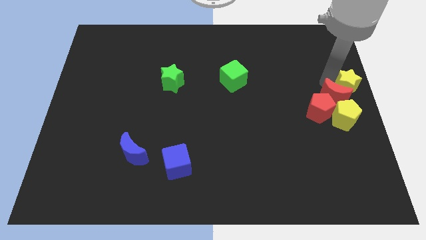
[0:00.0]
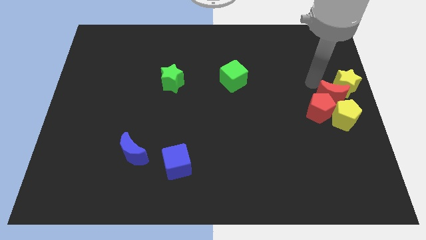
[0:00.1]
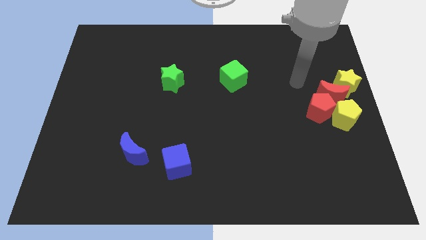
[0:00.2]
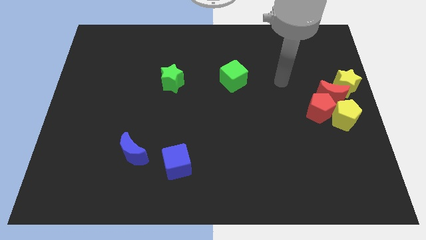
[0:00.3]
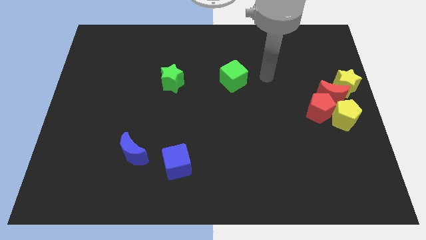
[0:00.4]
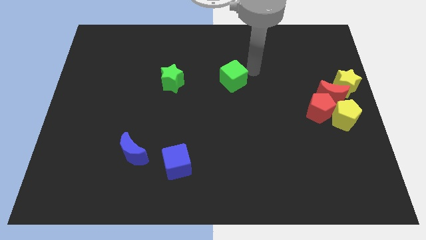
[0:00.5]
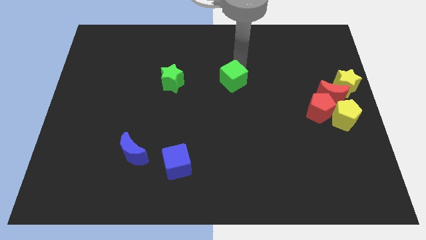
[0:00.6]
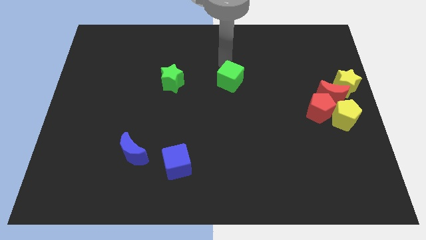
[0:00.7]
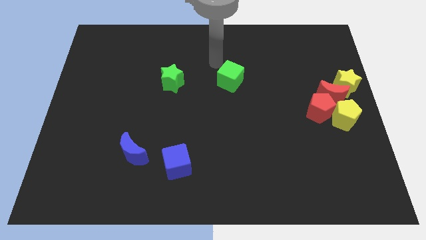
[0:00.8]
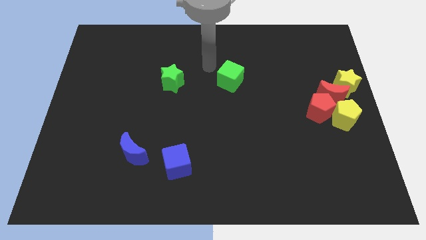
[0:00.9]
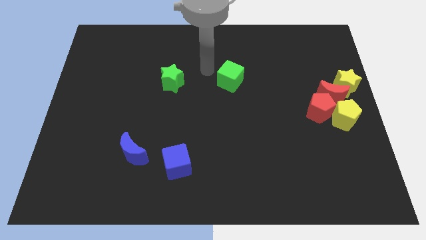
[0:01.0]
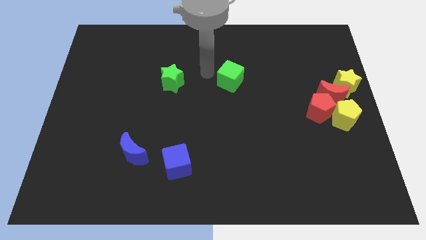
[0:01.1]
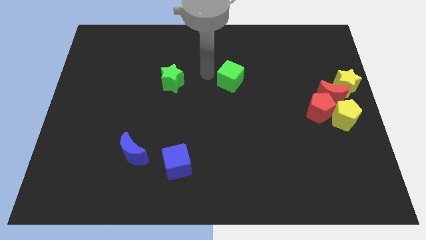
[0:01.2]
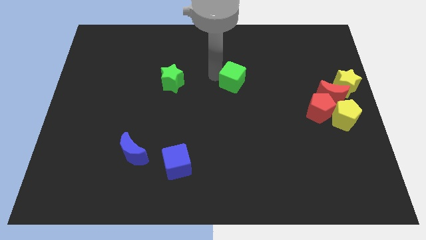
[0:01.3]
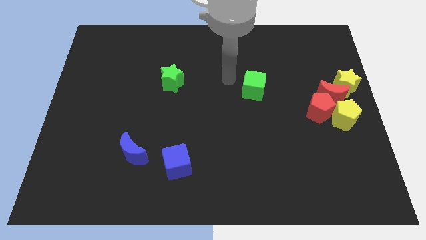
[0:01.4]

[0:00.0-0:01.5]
place arm near the green cube

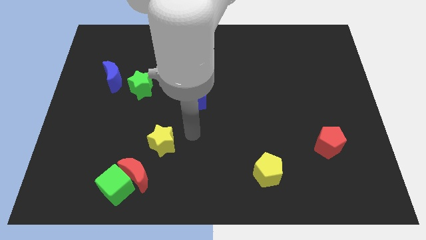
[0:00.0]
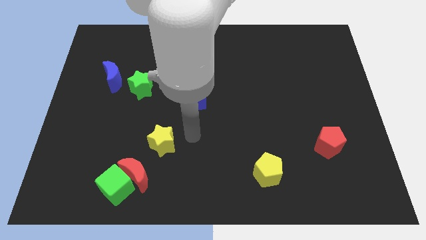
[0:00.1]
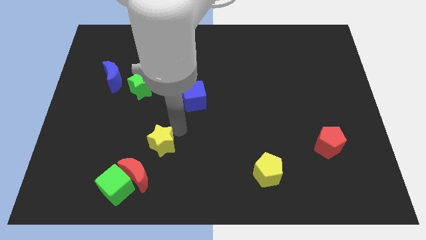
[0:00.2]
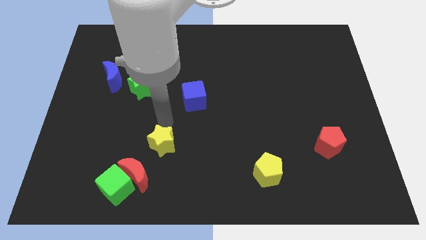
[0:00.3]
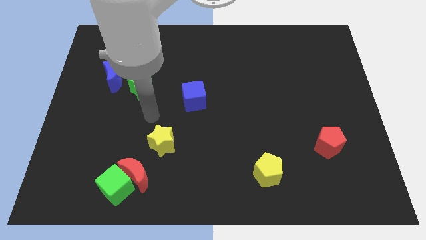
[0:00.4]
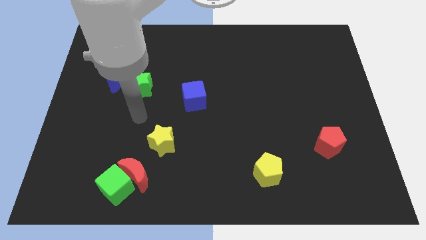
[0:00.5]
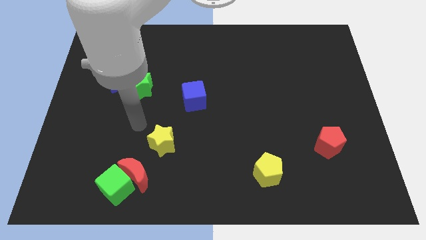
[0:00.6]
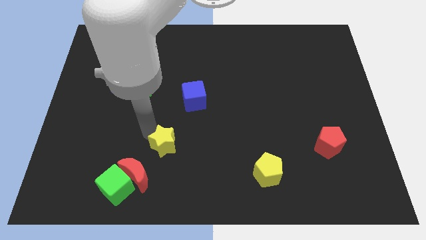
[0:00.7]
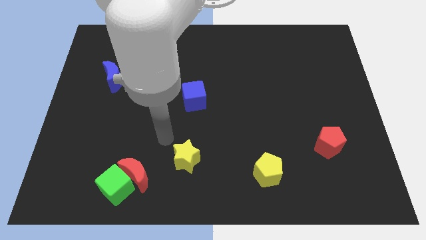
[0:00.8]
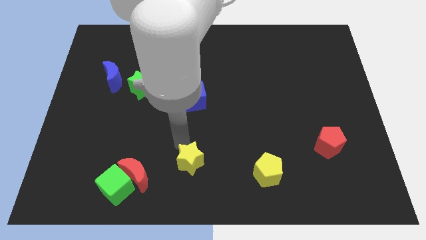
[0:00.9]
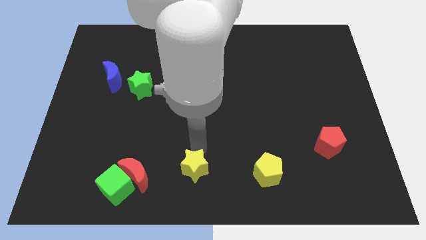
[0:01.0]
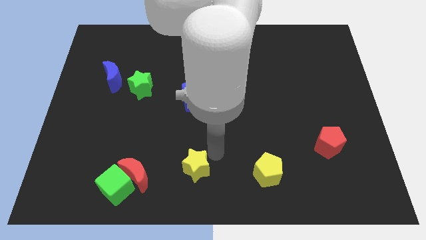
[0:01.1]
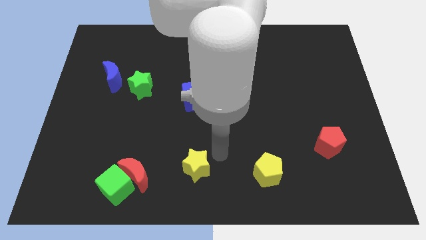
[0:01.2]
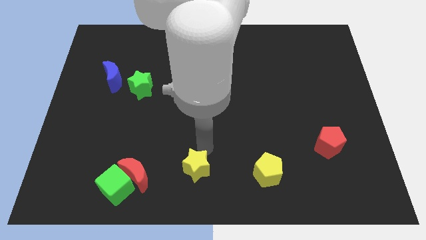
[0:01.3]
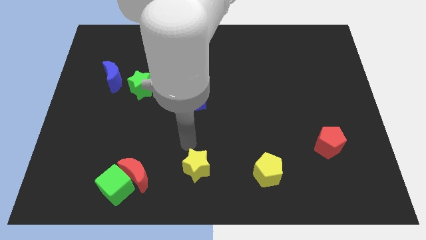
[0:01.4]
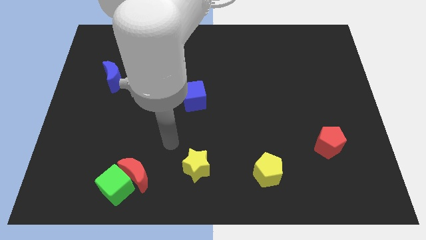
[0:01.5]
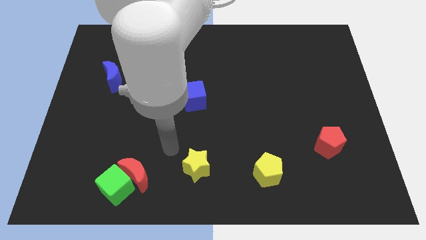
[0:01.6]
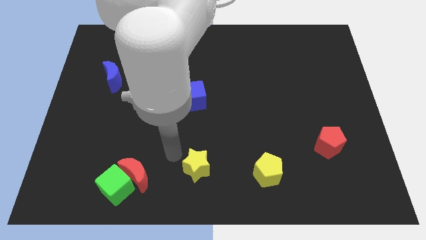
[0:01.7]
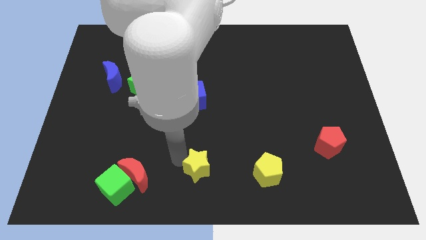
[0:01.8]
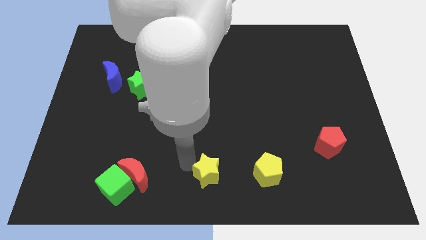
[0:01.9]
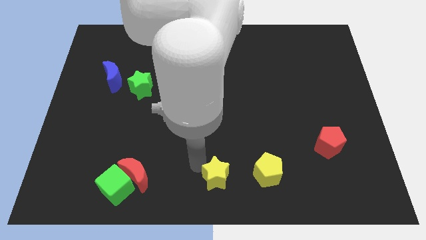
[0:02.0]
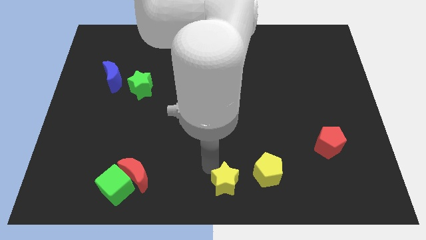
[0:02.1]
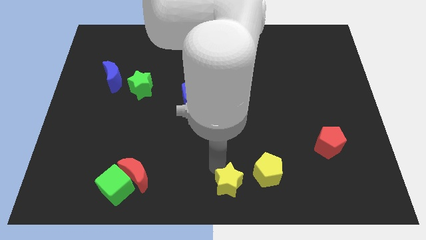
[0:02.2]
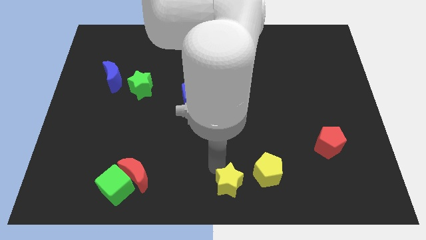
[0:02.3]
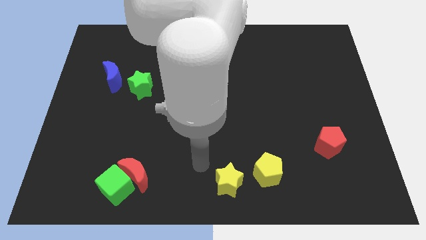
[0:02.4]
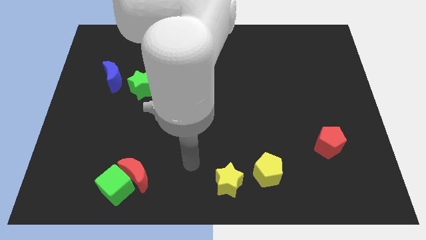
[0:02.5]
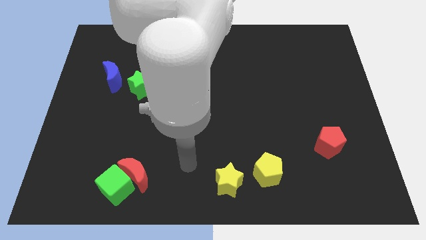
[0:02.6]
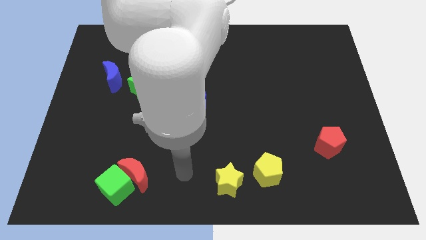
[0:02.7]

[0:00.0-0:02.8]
place yellow star beside yellow pentagon

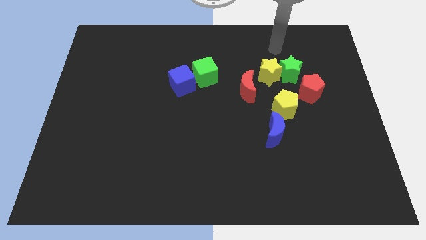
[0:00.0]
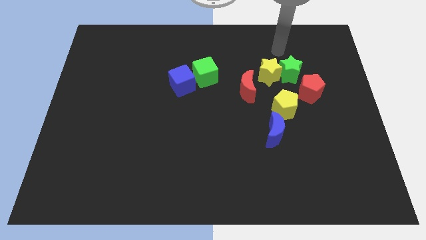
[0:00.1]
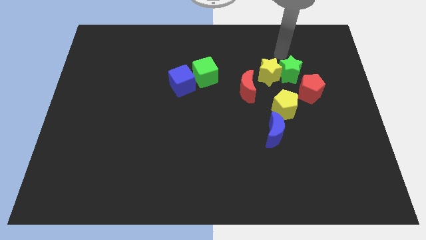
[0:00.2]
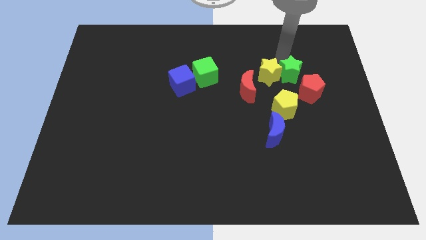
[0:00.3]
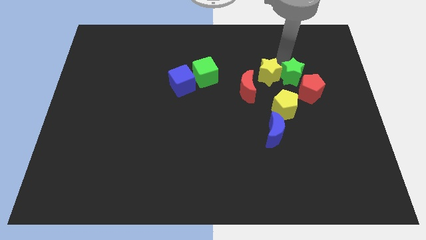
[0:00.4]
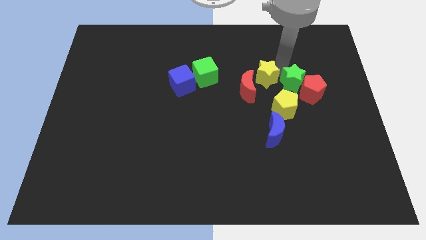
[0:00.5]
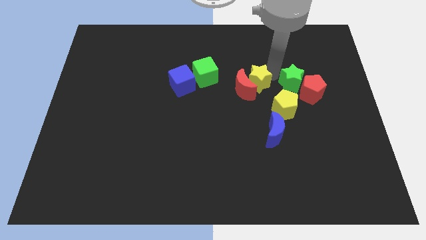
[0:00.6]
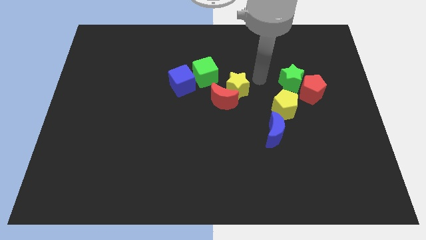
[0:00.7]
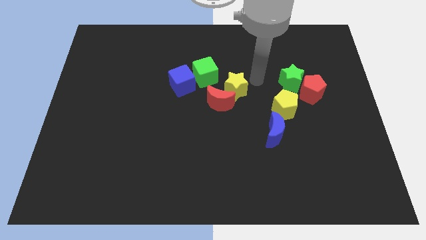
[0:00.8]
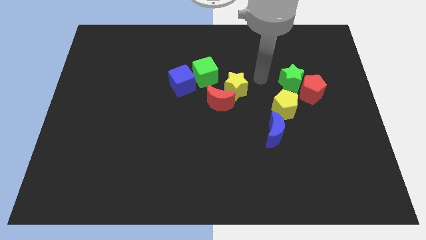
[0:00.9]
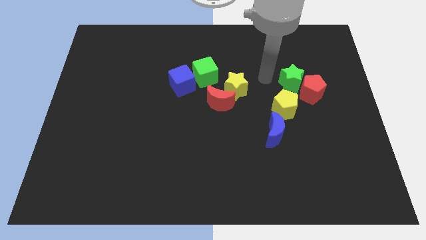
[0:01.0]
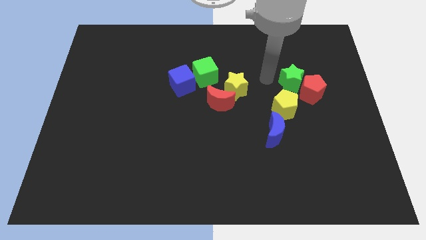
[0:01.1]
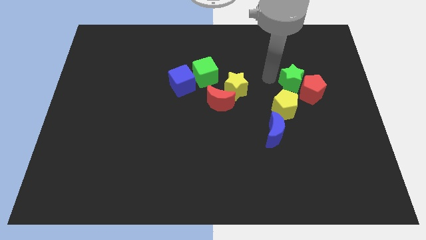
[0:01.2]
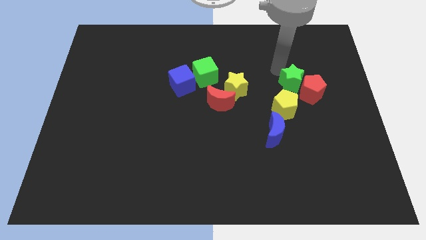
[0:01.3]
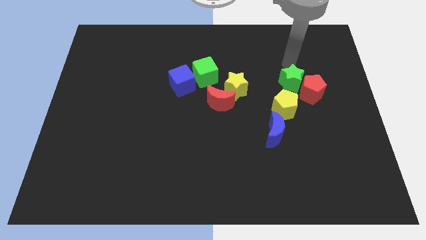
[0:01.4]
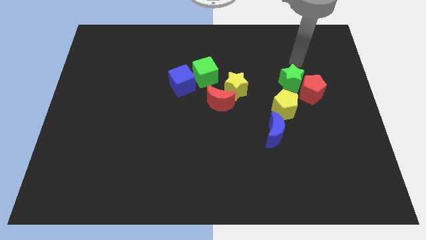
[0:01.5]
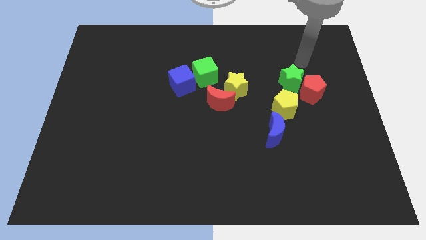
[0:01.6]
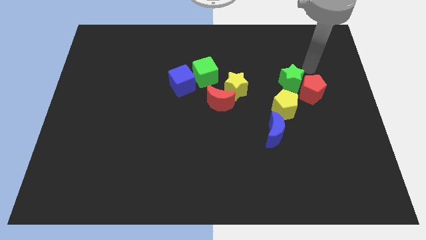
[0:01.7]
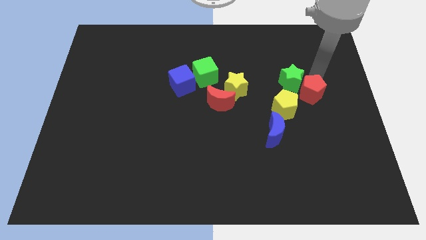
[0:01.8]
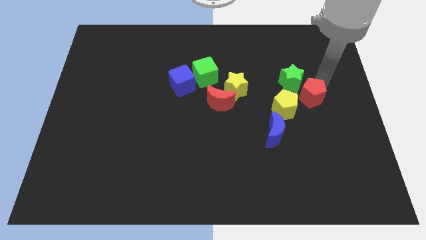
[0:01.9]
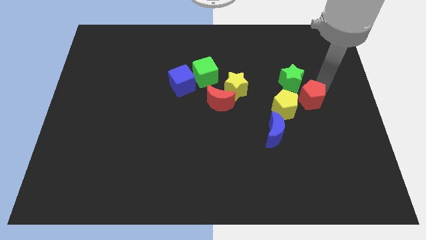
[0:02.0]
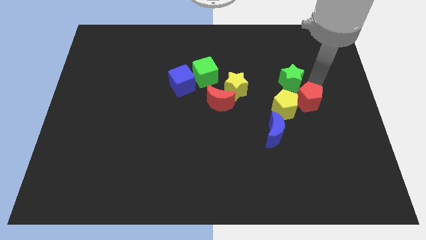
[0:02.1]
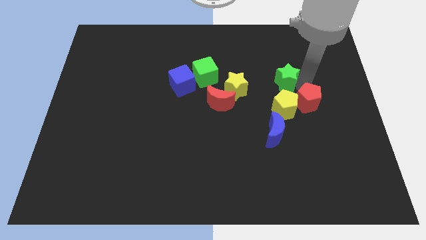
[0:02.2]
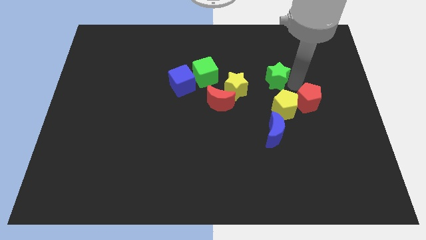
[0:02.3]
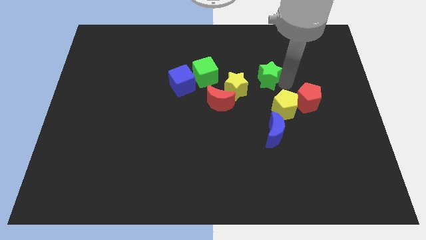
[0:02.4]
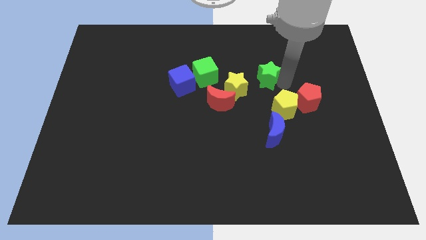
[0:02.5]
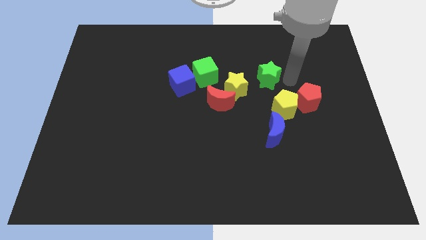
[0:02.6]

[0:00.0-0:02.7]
slide the yellow star and red moon to the bottom of the green cube

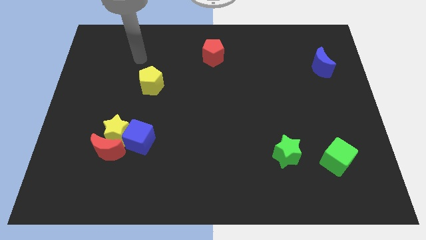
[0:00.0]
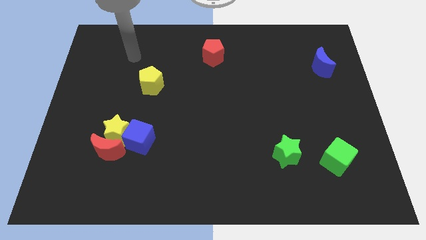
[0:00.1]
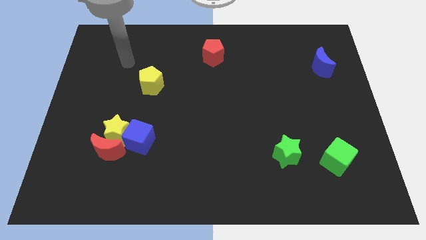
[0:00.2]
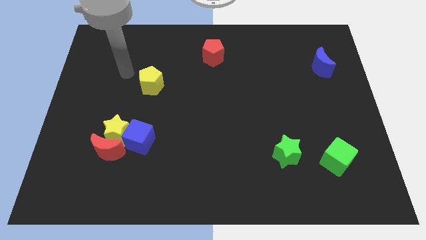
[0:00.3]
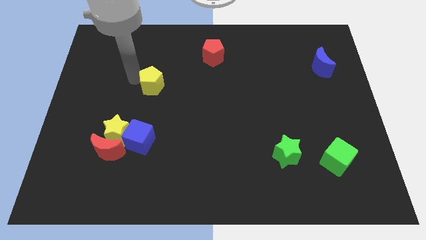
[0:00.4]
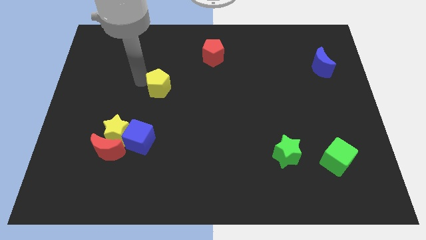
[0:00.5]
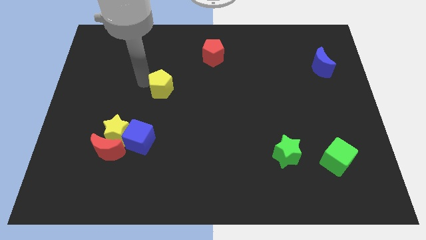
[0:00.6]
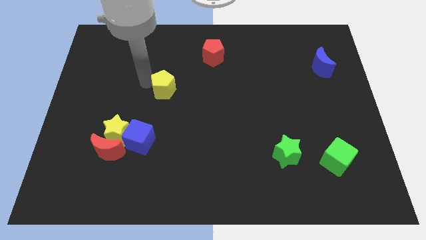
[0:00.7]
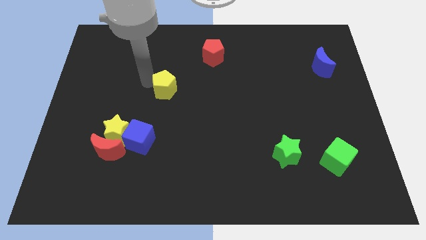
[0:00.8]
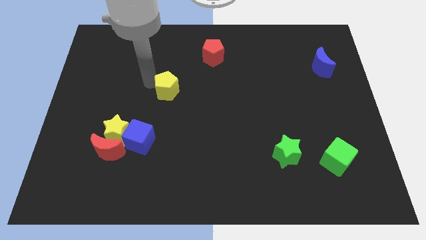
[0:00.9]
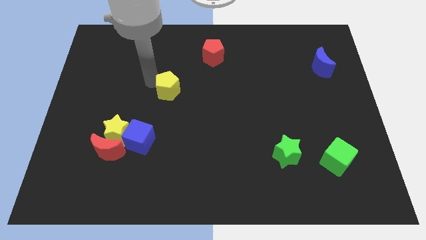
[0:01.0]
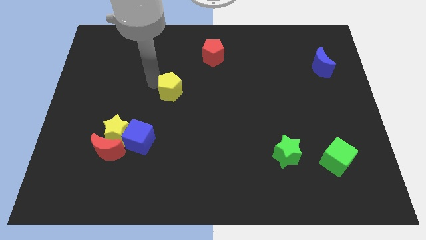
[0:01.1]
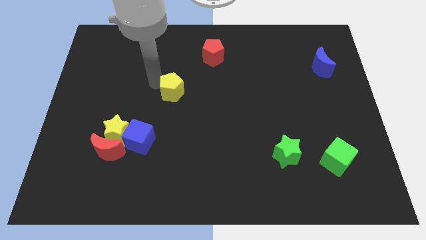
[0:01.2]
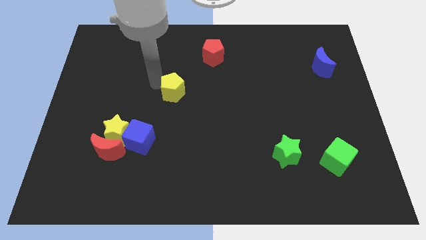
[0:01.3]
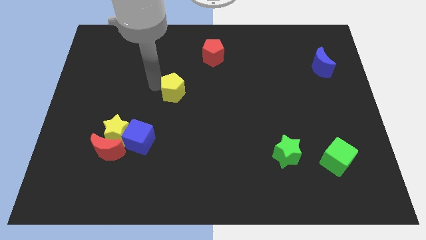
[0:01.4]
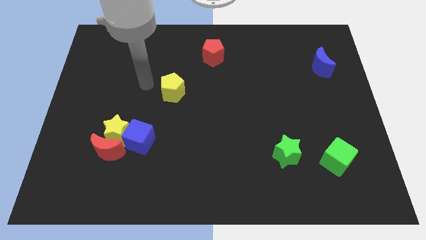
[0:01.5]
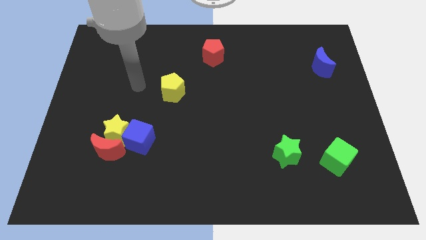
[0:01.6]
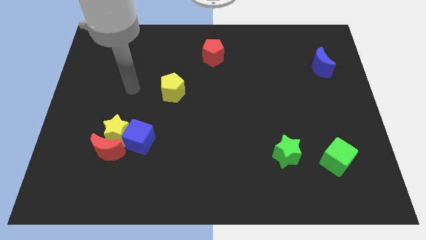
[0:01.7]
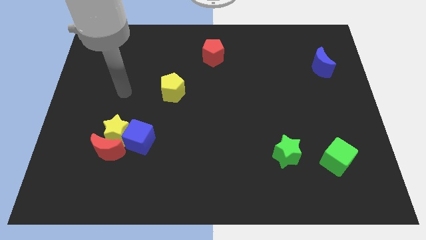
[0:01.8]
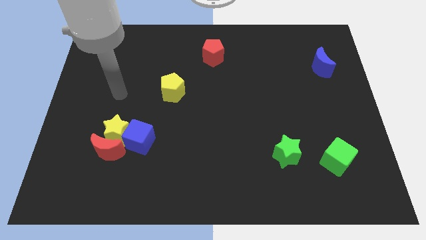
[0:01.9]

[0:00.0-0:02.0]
move the yellow pentagon slightly right

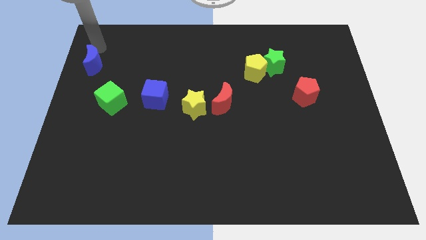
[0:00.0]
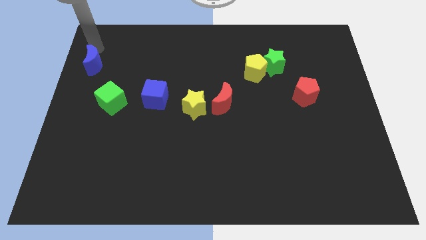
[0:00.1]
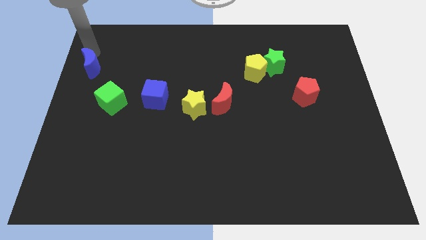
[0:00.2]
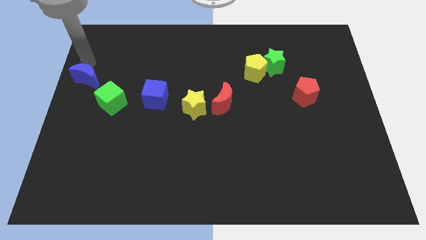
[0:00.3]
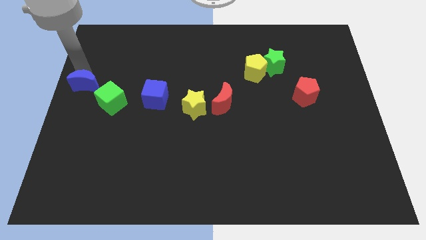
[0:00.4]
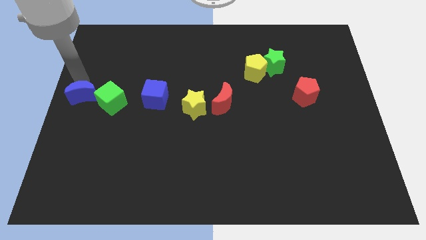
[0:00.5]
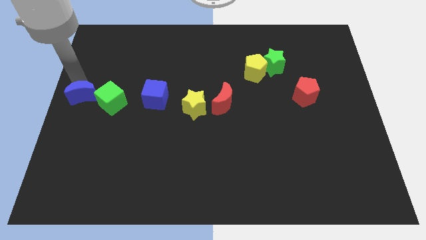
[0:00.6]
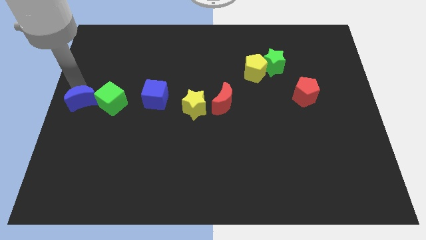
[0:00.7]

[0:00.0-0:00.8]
make the blue crescent to touch the green cube
